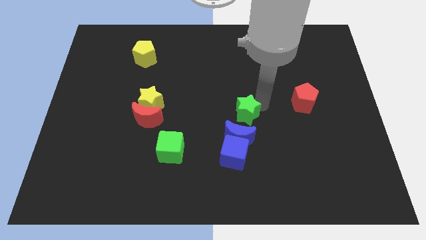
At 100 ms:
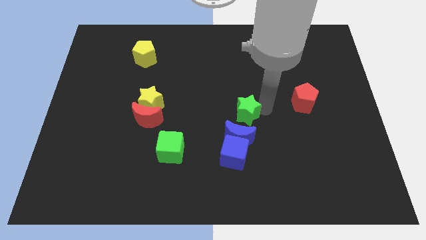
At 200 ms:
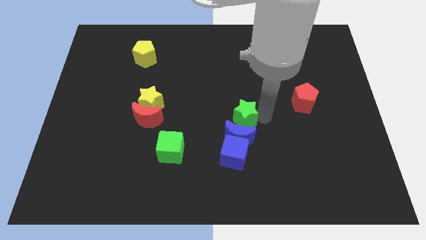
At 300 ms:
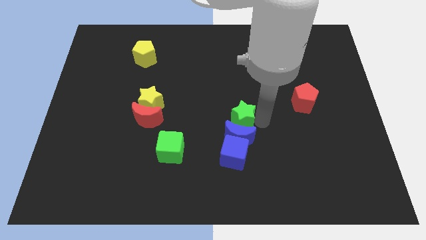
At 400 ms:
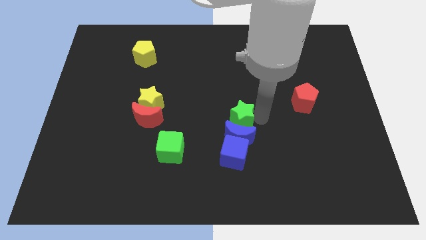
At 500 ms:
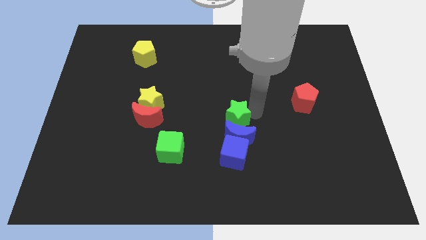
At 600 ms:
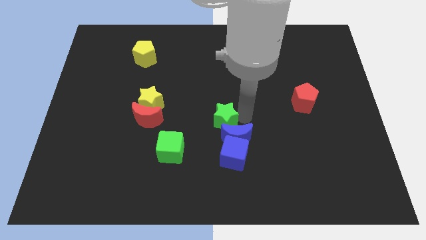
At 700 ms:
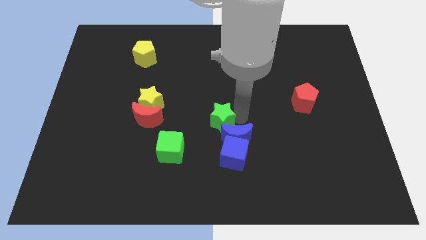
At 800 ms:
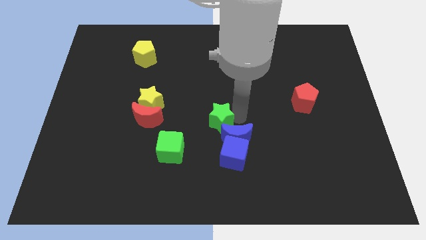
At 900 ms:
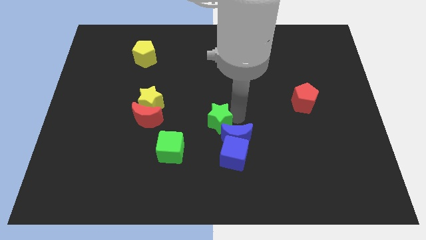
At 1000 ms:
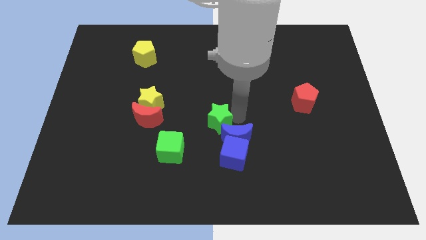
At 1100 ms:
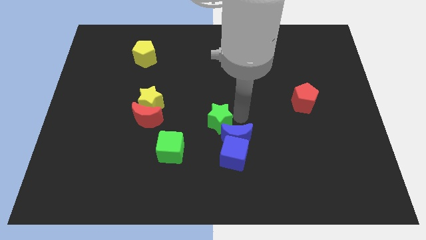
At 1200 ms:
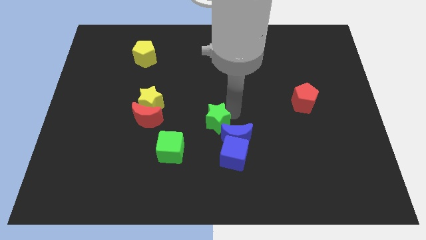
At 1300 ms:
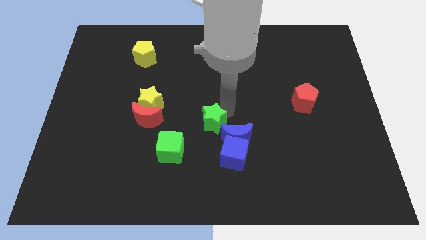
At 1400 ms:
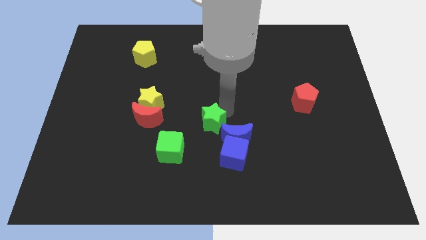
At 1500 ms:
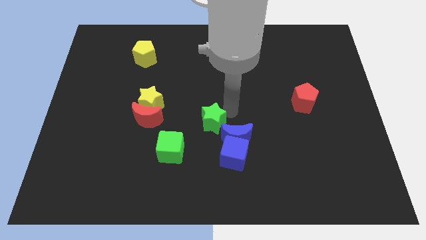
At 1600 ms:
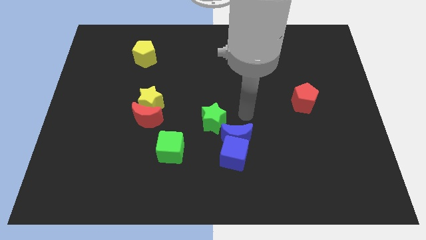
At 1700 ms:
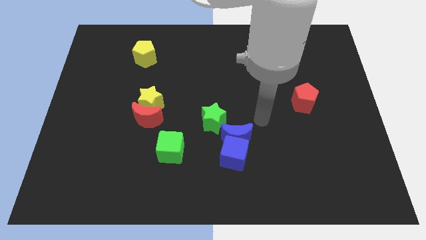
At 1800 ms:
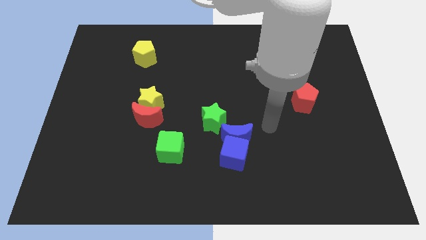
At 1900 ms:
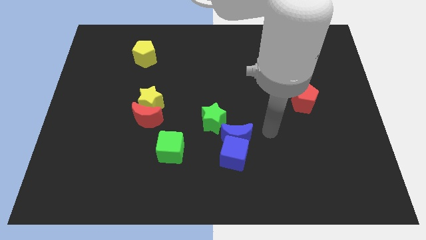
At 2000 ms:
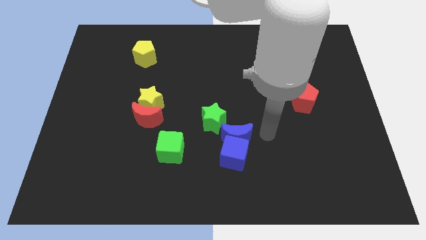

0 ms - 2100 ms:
move your arm away from the green star

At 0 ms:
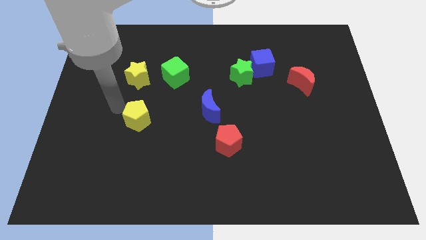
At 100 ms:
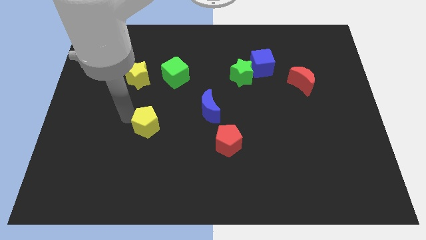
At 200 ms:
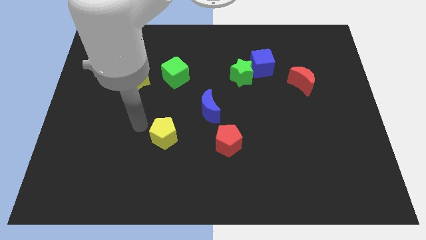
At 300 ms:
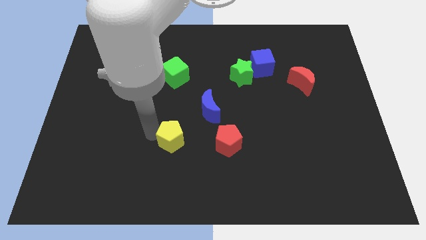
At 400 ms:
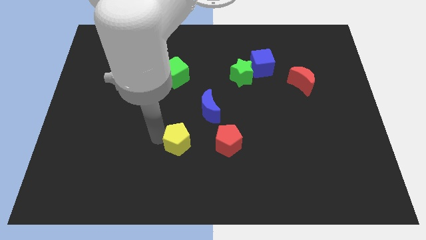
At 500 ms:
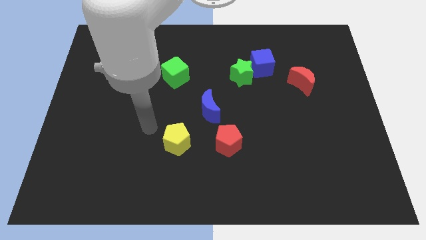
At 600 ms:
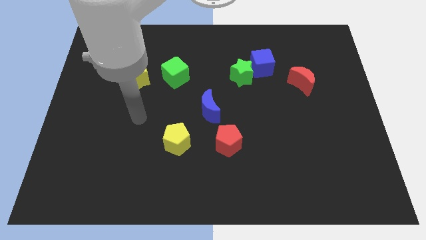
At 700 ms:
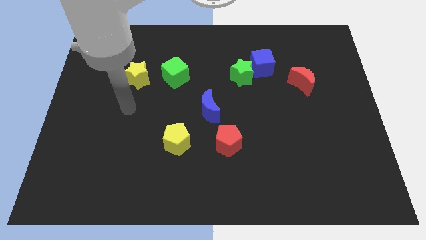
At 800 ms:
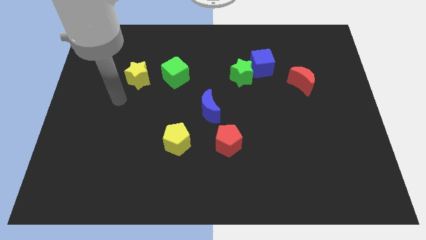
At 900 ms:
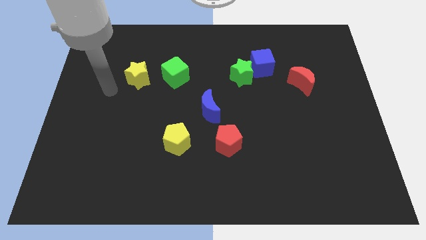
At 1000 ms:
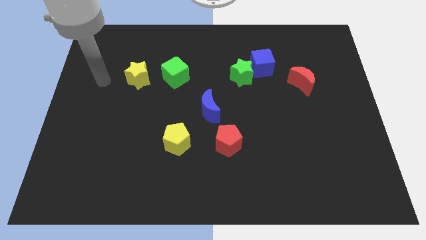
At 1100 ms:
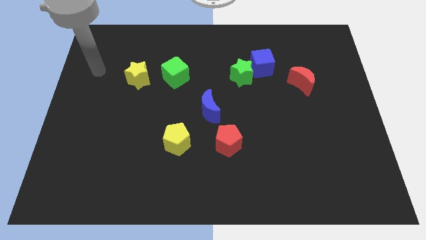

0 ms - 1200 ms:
place yellow pentagon below green cube

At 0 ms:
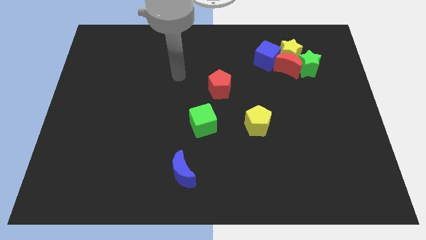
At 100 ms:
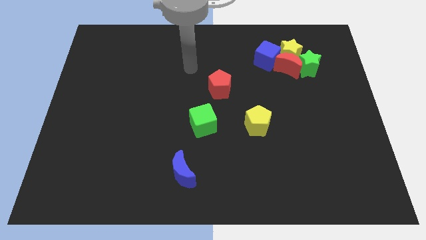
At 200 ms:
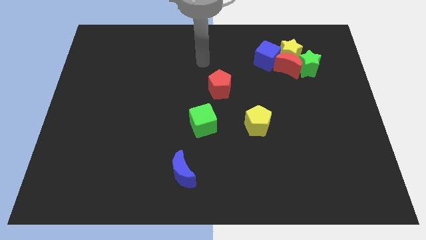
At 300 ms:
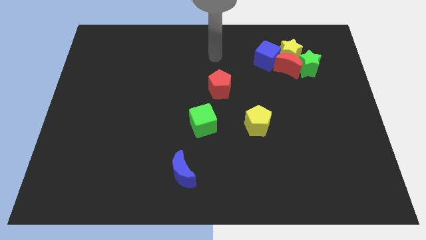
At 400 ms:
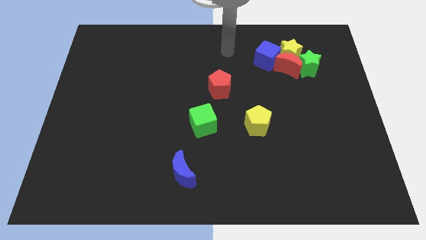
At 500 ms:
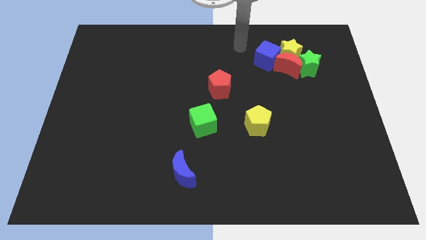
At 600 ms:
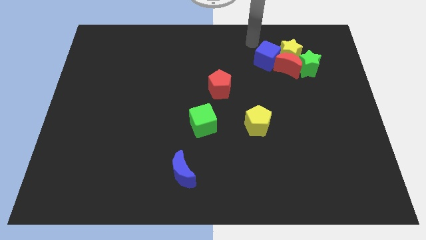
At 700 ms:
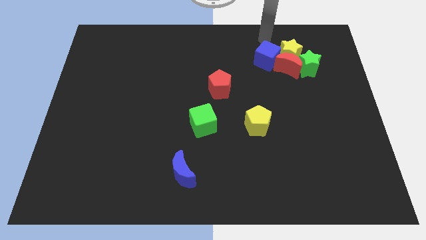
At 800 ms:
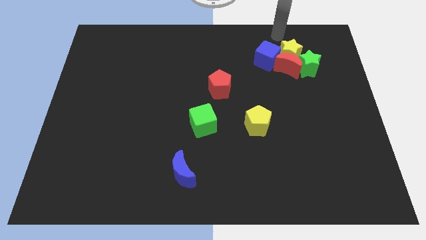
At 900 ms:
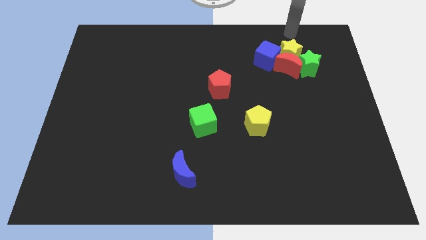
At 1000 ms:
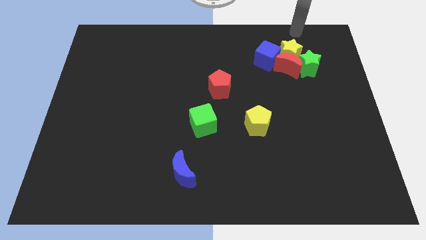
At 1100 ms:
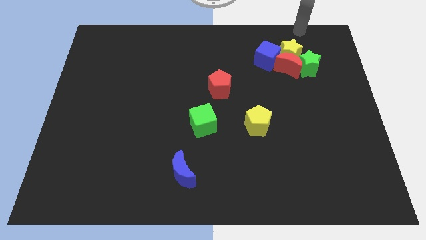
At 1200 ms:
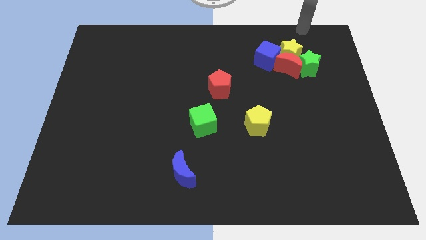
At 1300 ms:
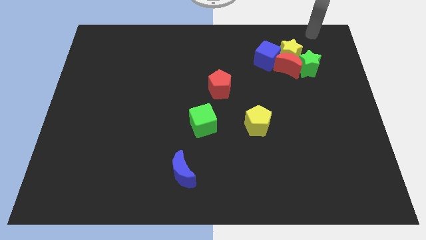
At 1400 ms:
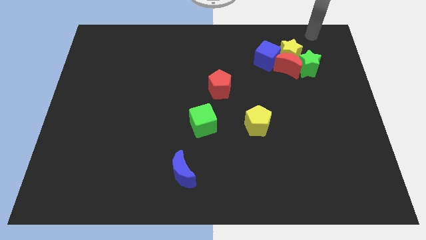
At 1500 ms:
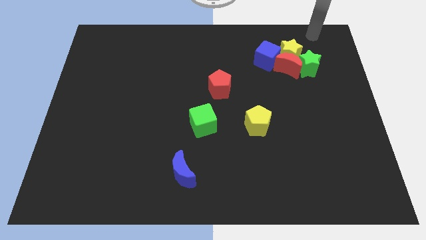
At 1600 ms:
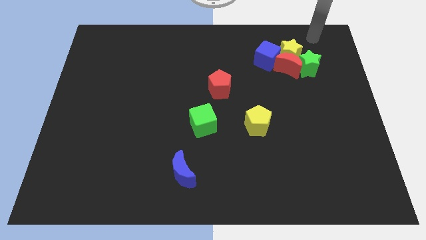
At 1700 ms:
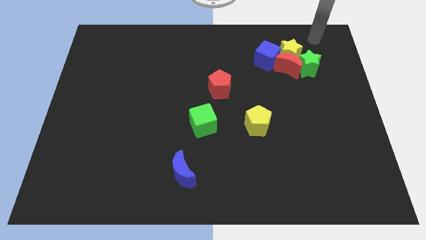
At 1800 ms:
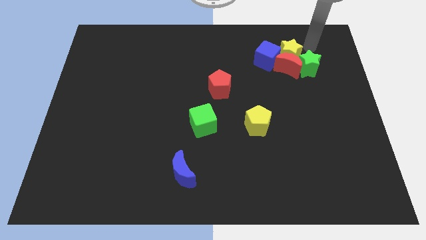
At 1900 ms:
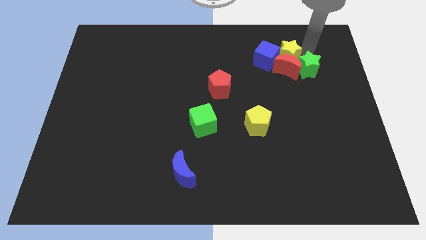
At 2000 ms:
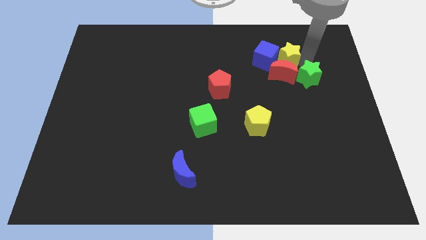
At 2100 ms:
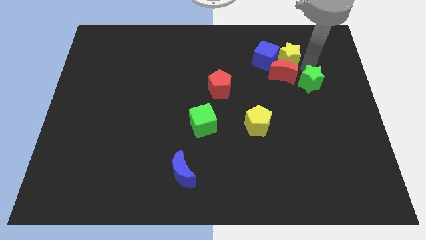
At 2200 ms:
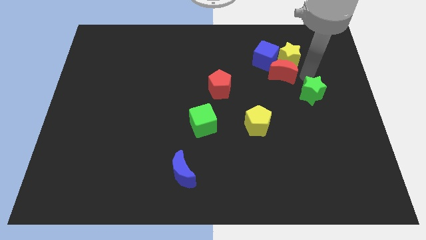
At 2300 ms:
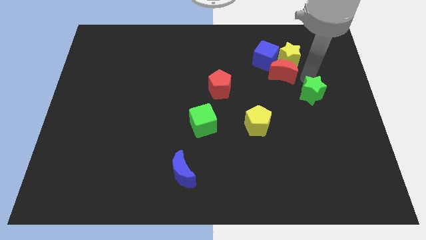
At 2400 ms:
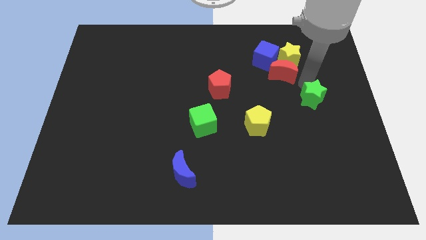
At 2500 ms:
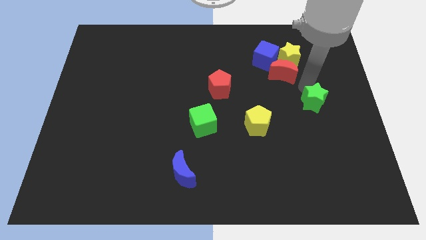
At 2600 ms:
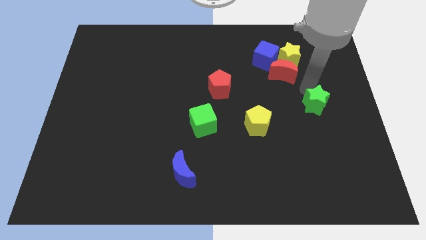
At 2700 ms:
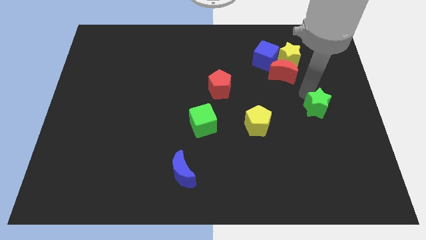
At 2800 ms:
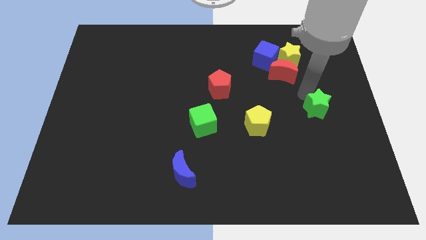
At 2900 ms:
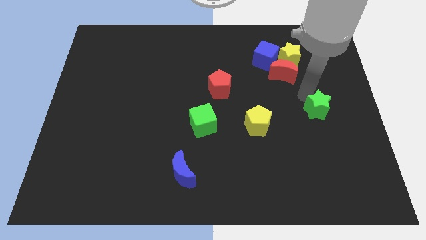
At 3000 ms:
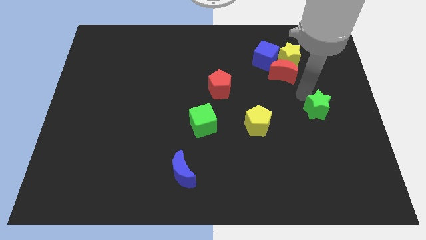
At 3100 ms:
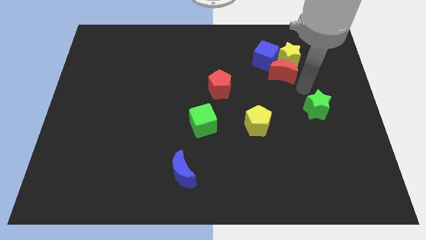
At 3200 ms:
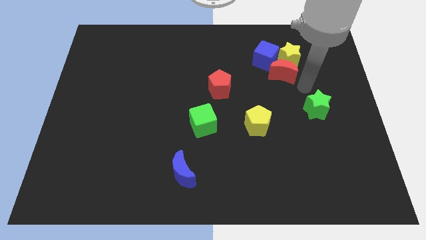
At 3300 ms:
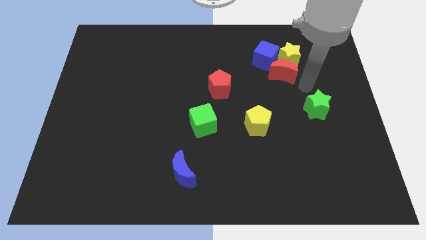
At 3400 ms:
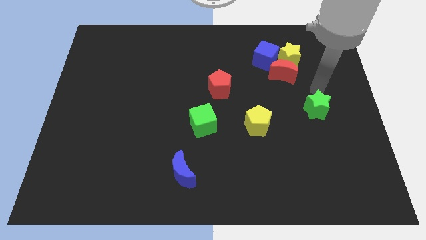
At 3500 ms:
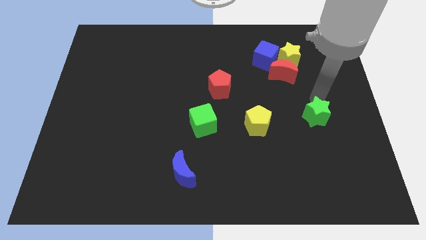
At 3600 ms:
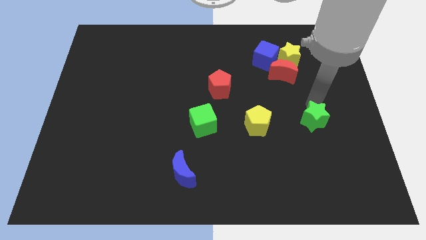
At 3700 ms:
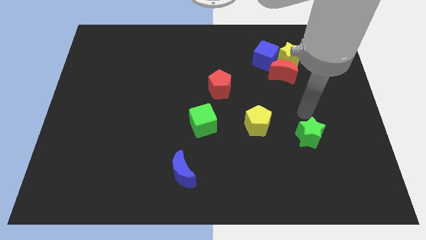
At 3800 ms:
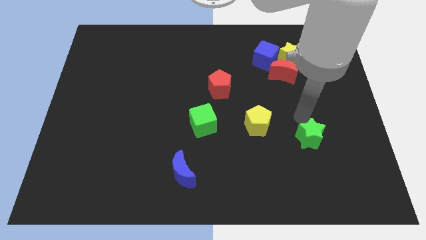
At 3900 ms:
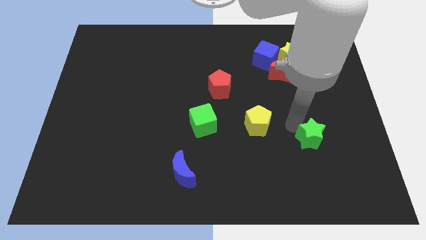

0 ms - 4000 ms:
separate green star from the group of blocks

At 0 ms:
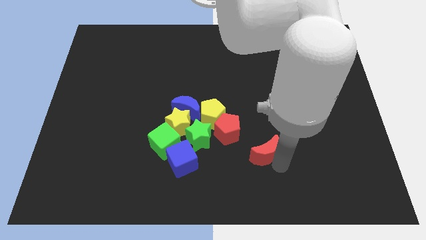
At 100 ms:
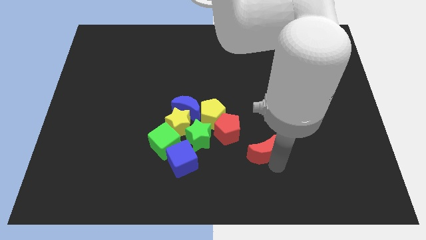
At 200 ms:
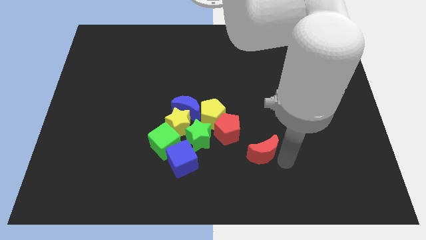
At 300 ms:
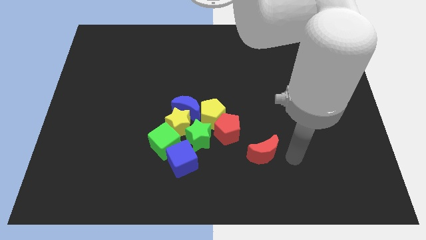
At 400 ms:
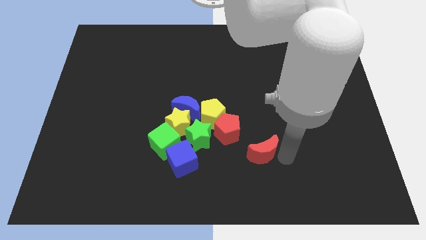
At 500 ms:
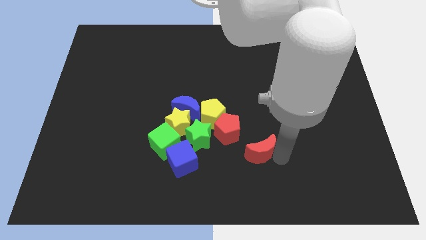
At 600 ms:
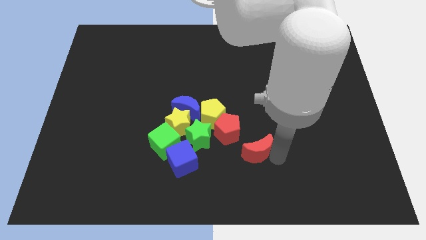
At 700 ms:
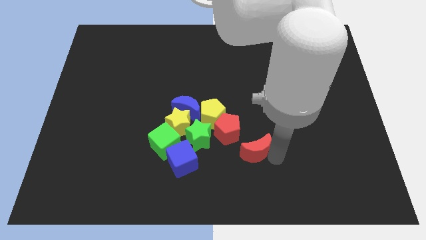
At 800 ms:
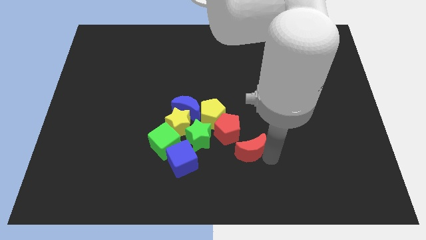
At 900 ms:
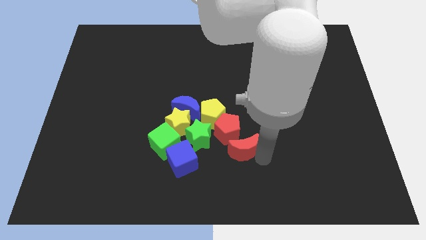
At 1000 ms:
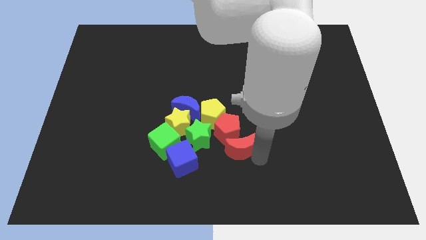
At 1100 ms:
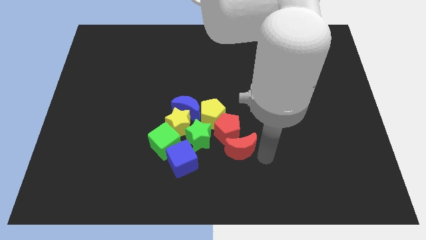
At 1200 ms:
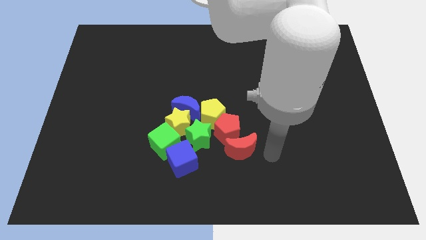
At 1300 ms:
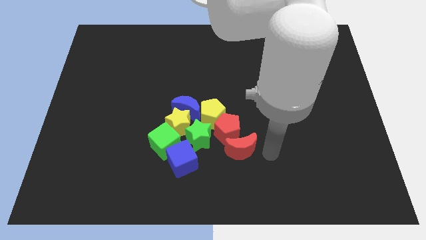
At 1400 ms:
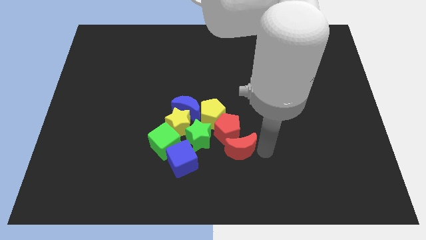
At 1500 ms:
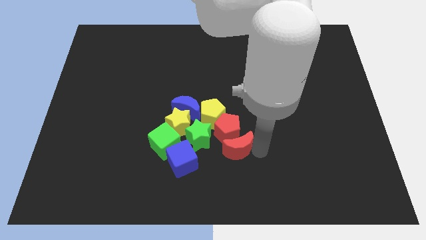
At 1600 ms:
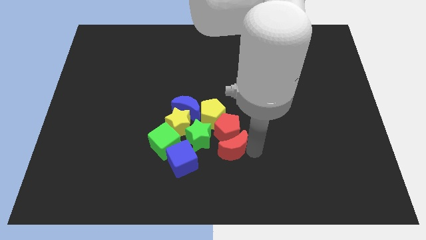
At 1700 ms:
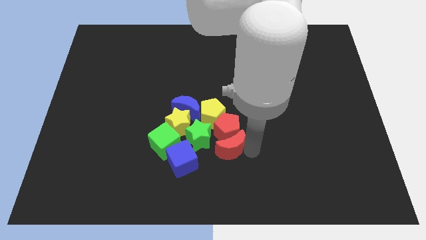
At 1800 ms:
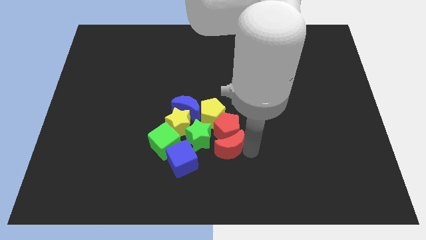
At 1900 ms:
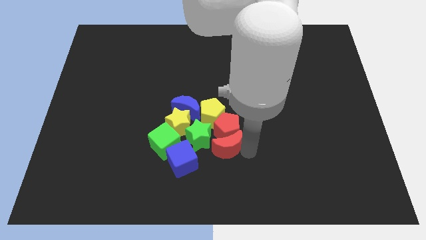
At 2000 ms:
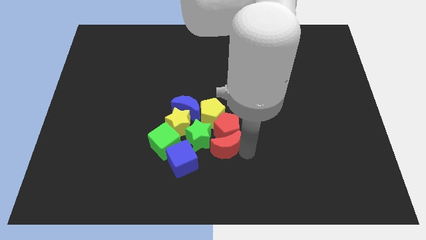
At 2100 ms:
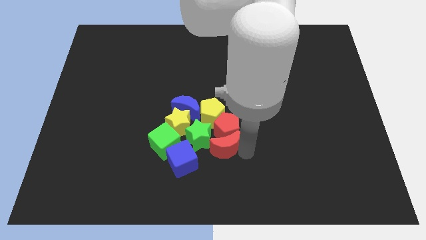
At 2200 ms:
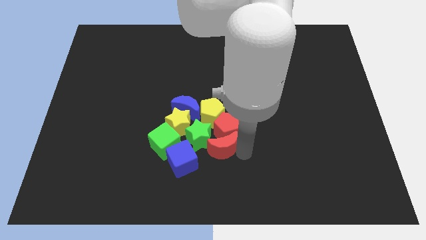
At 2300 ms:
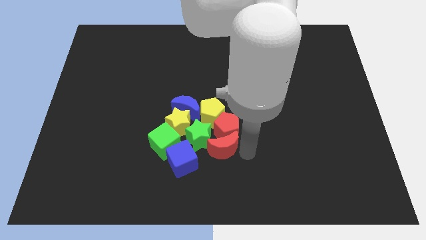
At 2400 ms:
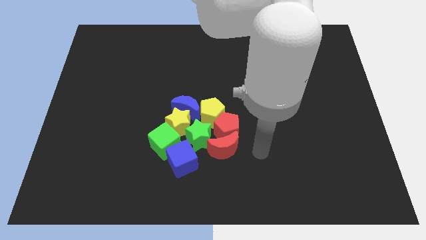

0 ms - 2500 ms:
move the red crescent bottom to the red pentagon
